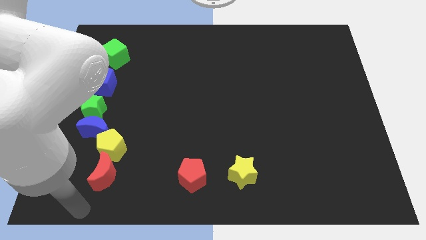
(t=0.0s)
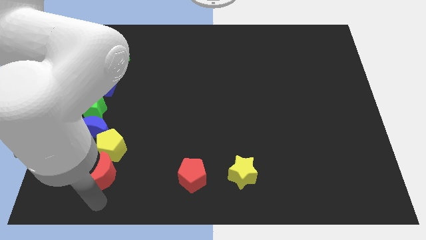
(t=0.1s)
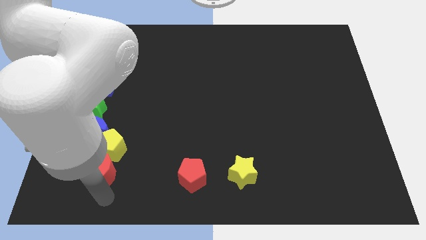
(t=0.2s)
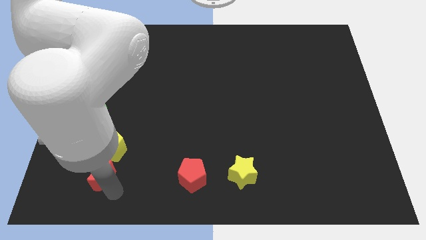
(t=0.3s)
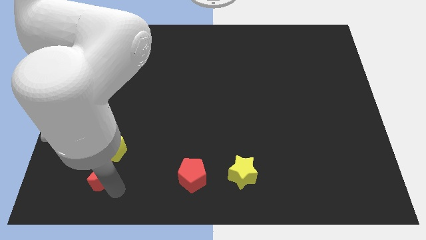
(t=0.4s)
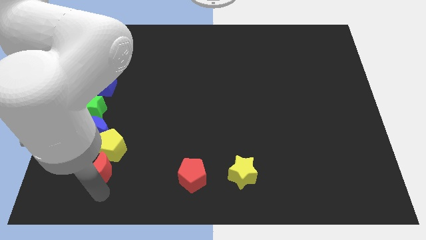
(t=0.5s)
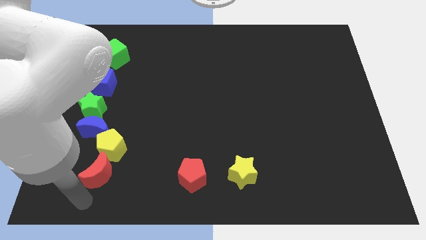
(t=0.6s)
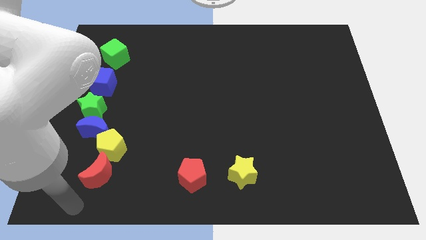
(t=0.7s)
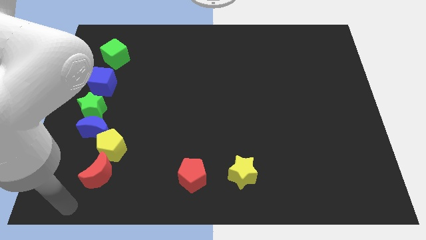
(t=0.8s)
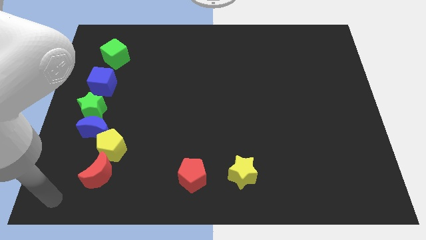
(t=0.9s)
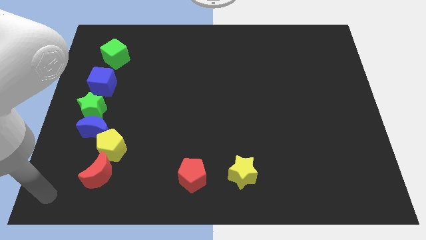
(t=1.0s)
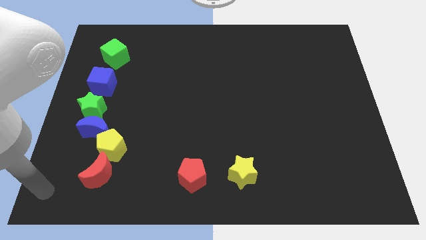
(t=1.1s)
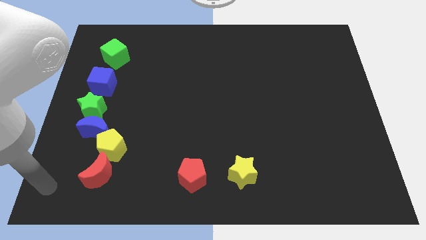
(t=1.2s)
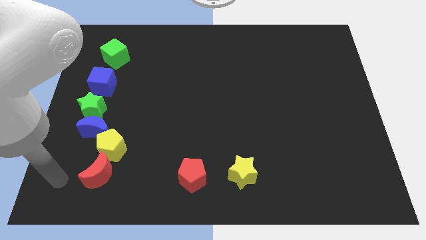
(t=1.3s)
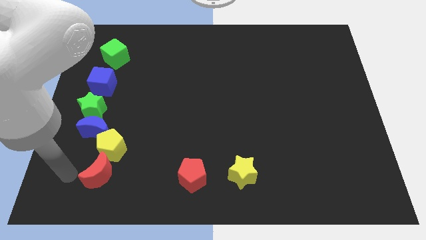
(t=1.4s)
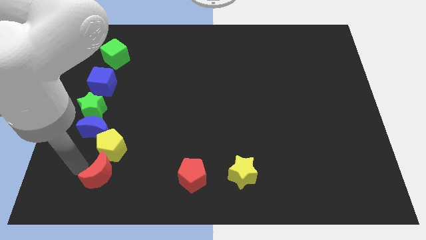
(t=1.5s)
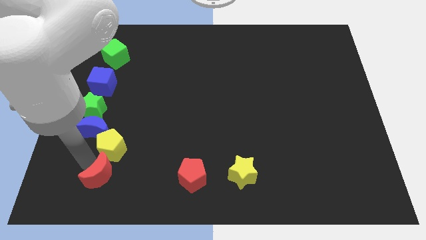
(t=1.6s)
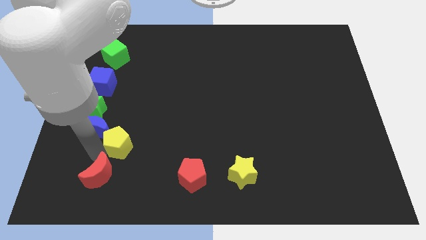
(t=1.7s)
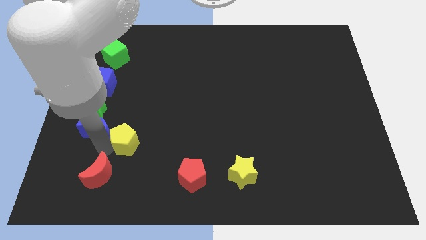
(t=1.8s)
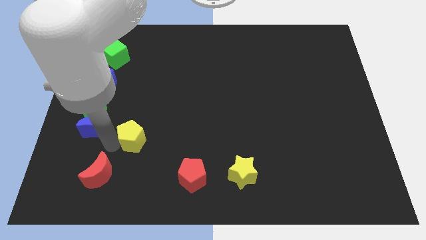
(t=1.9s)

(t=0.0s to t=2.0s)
separate the yellow pentagon from the red moon

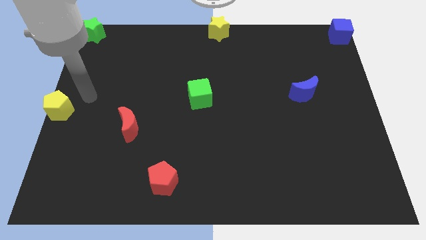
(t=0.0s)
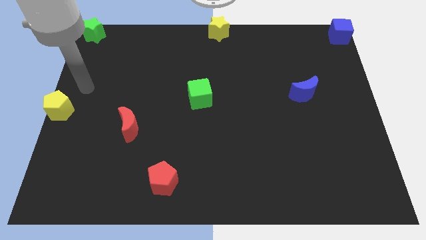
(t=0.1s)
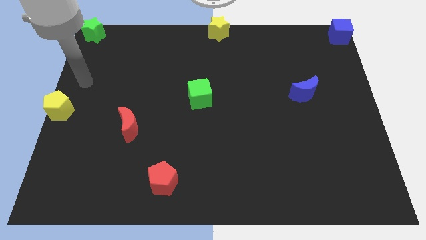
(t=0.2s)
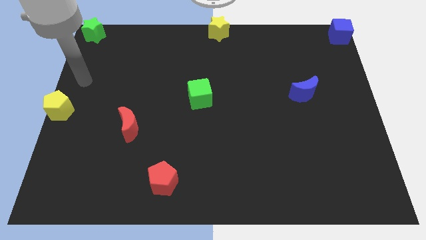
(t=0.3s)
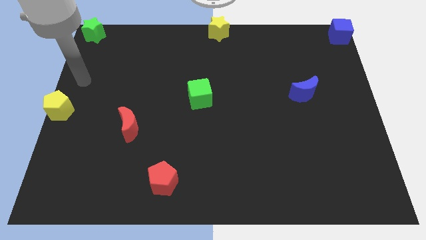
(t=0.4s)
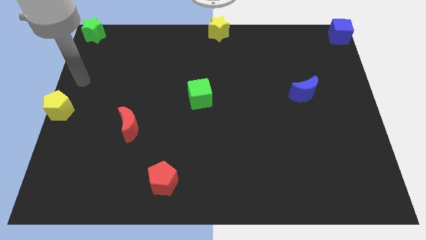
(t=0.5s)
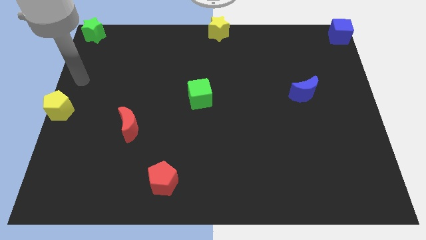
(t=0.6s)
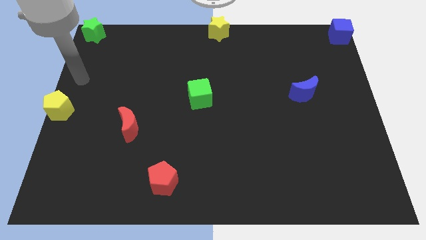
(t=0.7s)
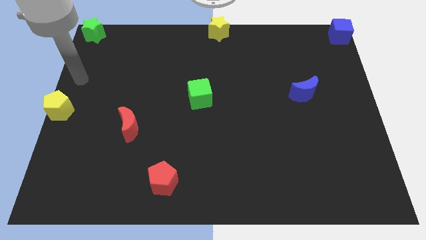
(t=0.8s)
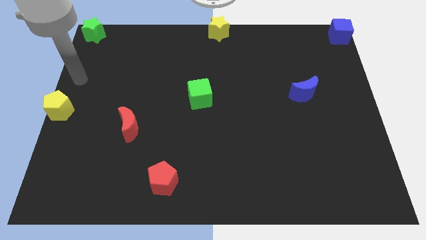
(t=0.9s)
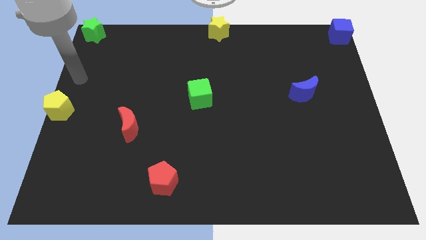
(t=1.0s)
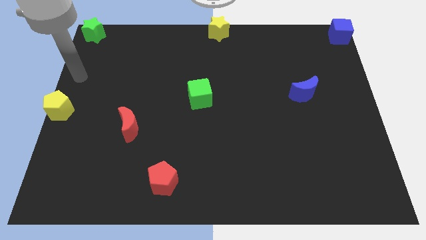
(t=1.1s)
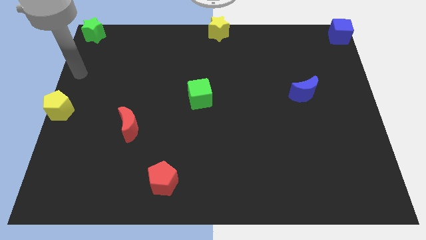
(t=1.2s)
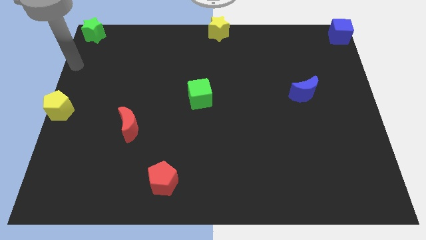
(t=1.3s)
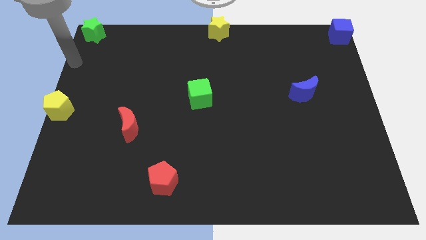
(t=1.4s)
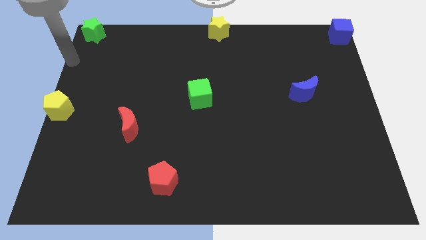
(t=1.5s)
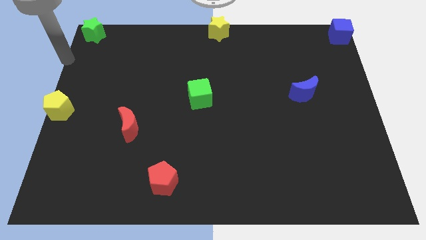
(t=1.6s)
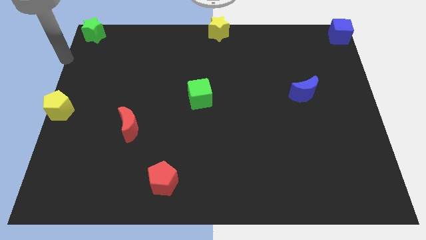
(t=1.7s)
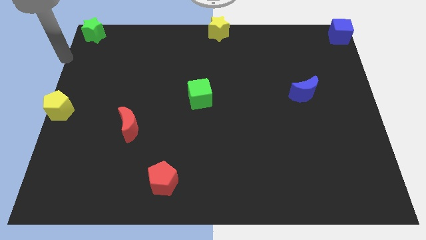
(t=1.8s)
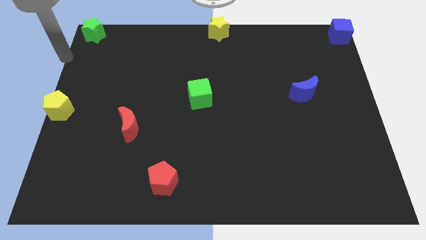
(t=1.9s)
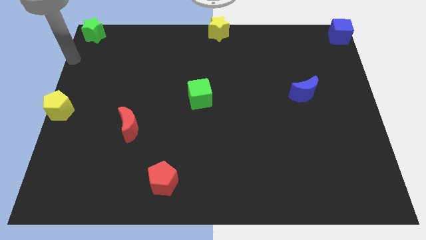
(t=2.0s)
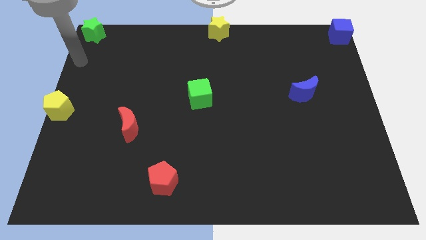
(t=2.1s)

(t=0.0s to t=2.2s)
point the arm in between the green star and the yellow pentagon

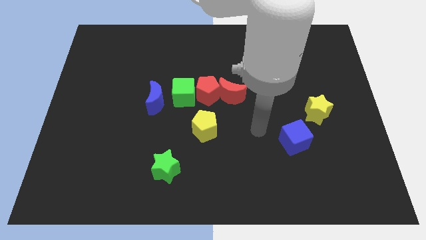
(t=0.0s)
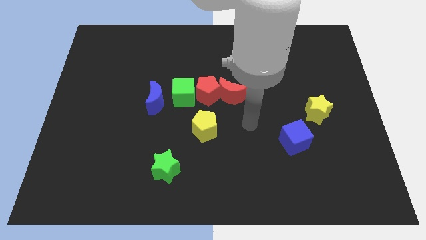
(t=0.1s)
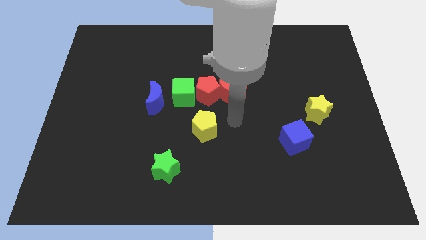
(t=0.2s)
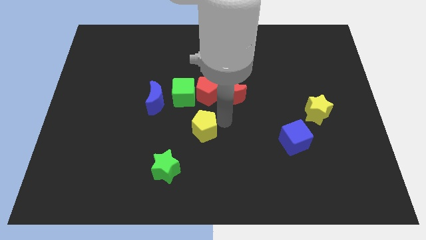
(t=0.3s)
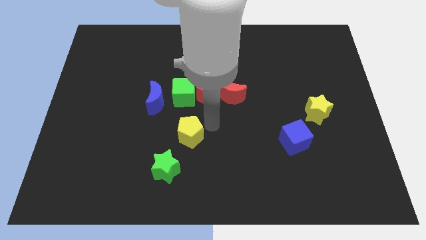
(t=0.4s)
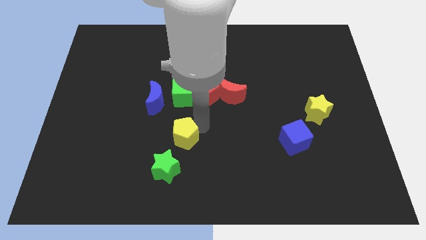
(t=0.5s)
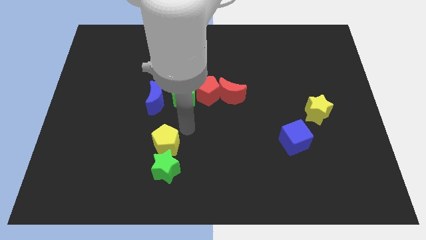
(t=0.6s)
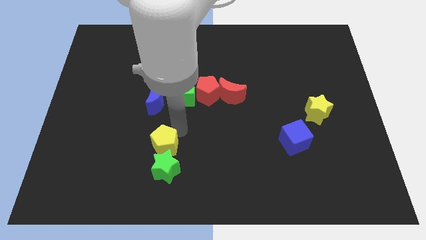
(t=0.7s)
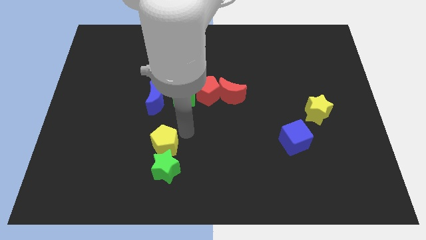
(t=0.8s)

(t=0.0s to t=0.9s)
push the yellow pentagon above the green star

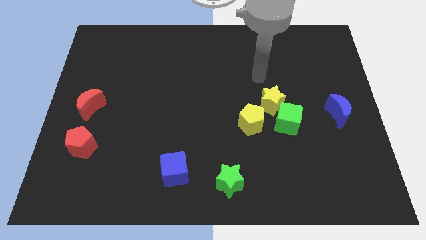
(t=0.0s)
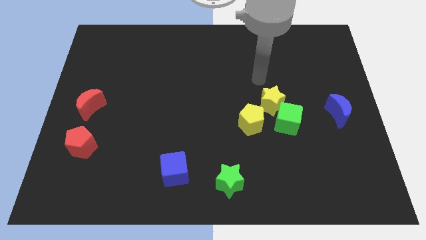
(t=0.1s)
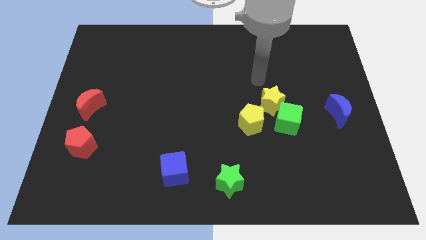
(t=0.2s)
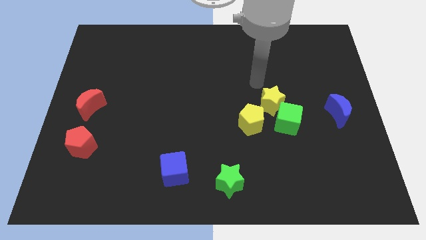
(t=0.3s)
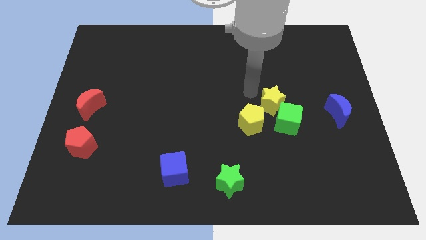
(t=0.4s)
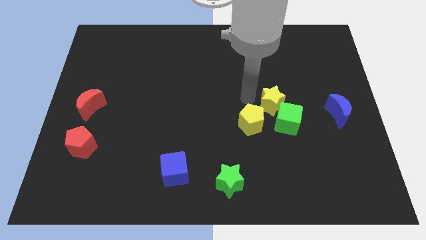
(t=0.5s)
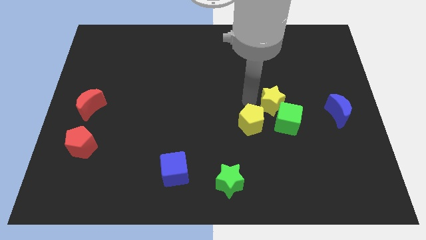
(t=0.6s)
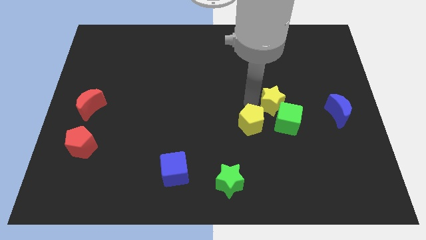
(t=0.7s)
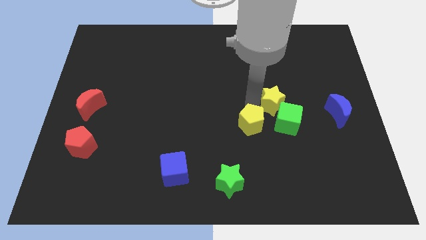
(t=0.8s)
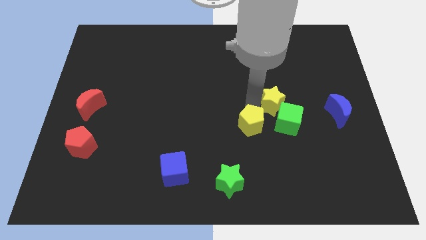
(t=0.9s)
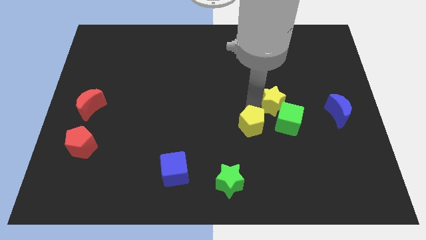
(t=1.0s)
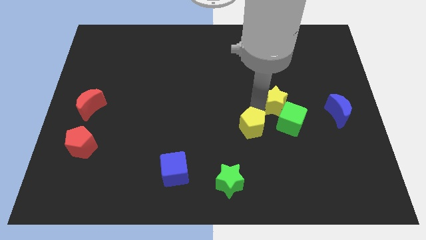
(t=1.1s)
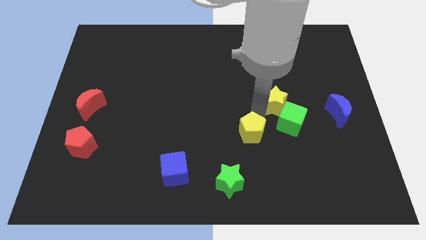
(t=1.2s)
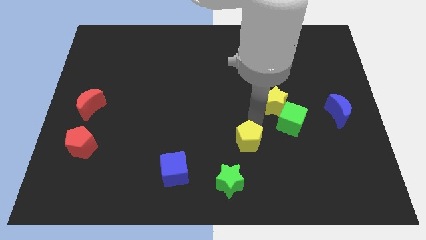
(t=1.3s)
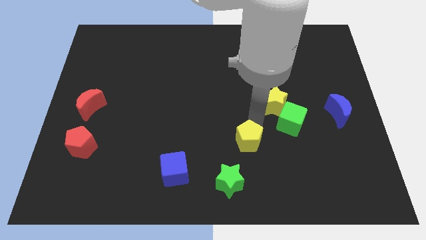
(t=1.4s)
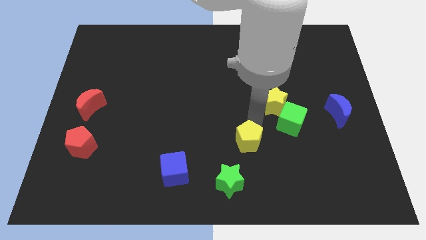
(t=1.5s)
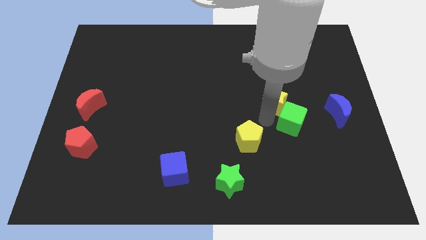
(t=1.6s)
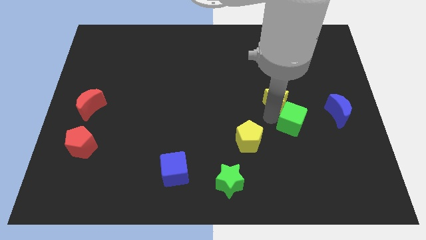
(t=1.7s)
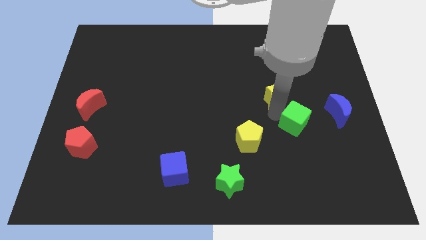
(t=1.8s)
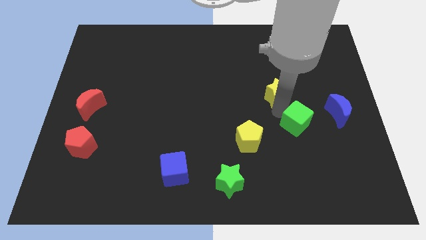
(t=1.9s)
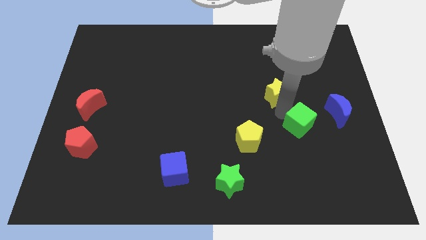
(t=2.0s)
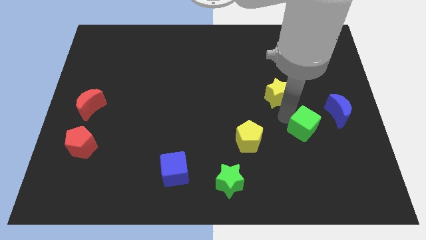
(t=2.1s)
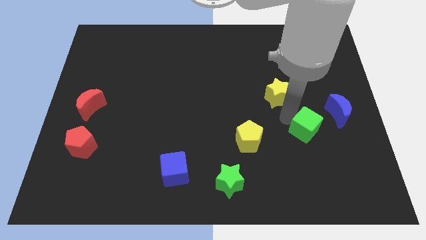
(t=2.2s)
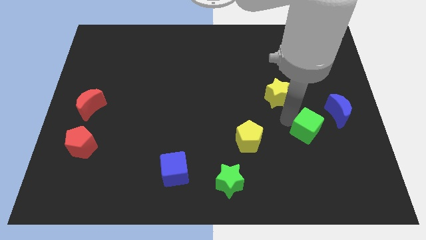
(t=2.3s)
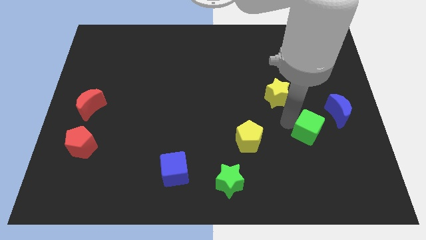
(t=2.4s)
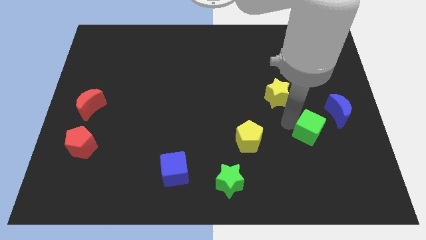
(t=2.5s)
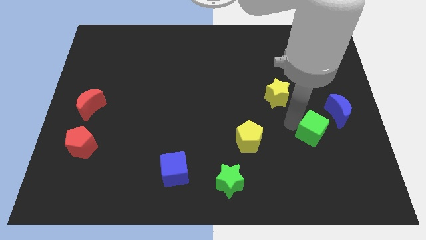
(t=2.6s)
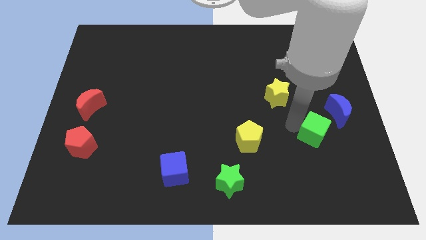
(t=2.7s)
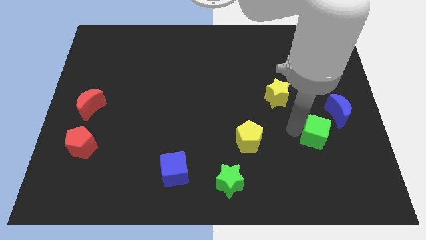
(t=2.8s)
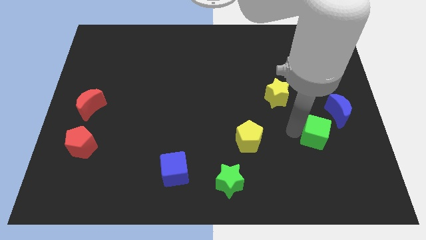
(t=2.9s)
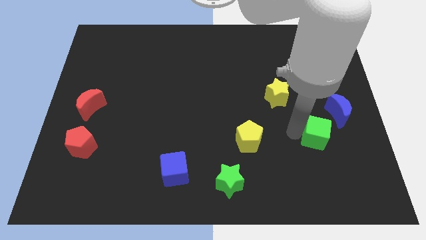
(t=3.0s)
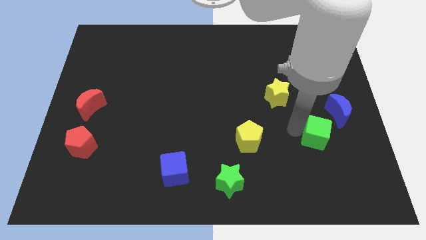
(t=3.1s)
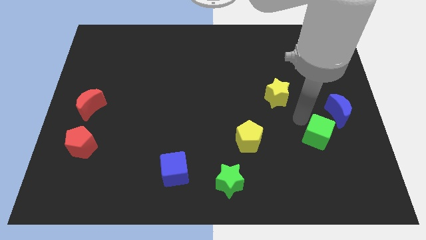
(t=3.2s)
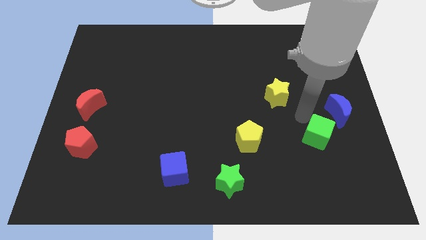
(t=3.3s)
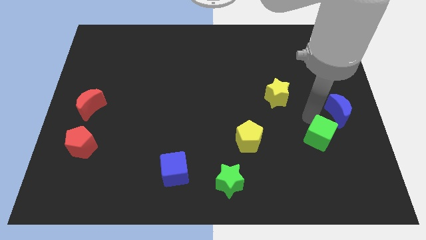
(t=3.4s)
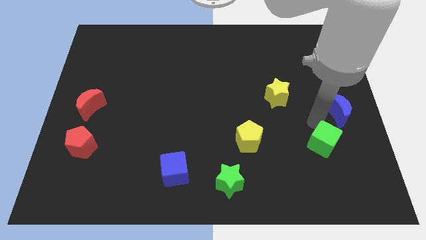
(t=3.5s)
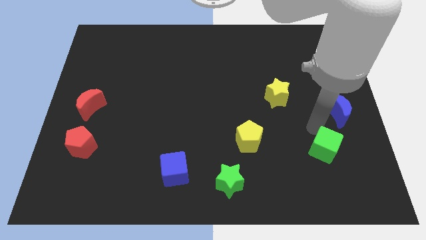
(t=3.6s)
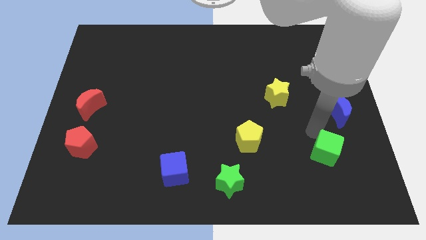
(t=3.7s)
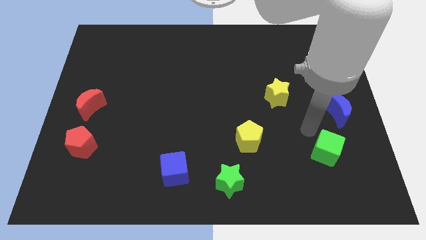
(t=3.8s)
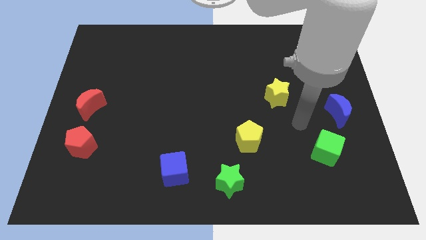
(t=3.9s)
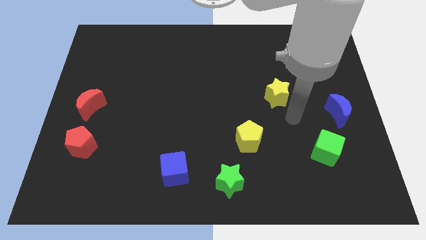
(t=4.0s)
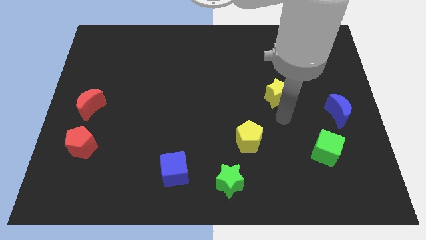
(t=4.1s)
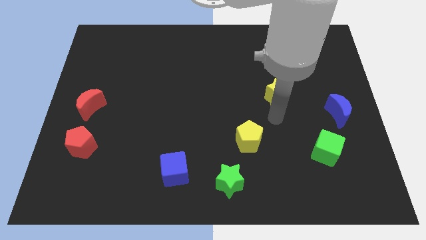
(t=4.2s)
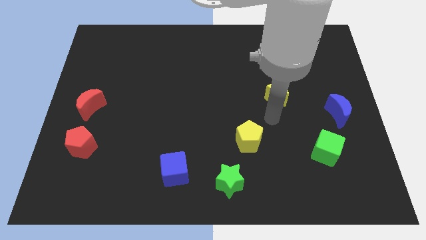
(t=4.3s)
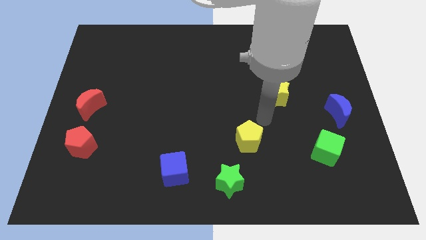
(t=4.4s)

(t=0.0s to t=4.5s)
separate green cube from green star
